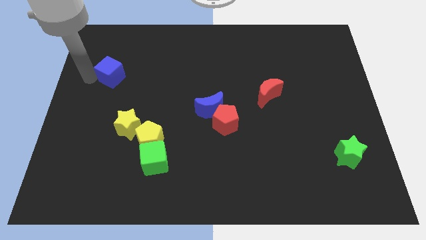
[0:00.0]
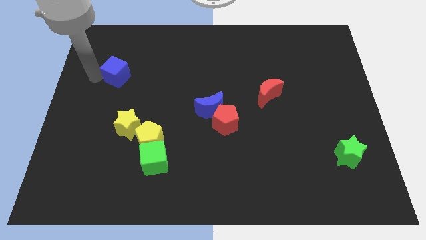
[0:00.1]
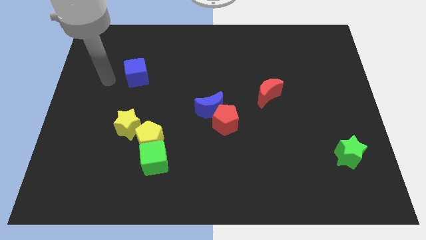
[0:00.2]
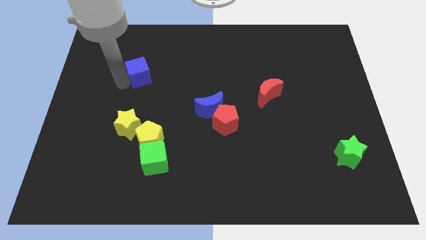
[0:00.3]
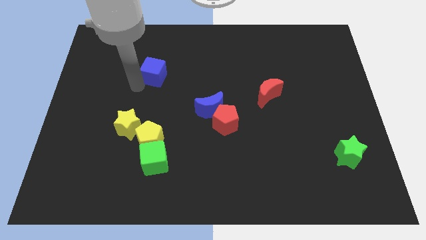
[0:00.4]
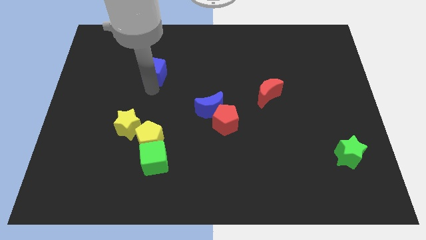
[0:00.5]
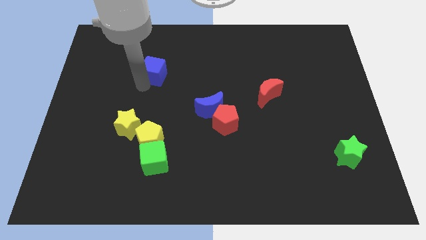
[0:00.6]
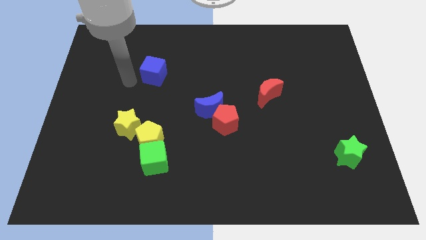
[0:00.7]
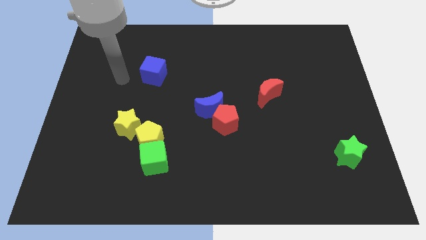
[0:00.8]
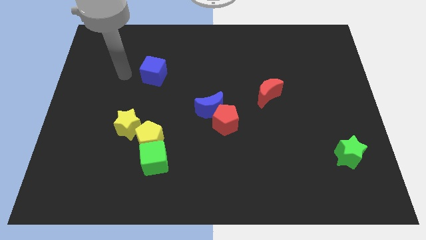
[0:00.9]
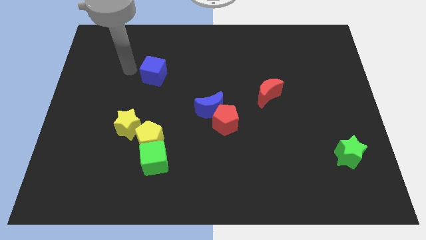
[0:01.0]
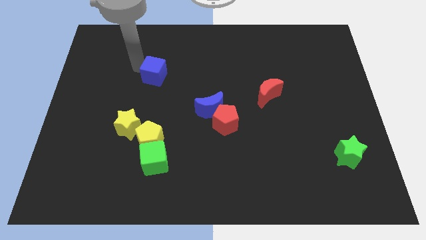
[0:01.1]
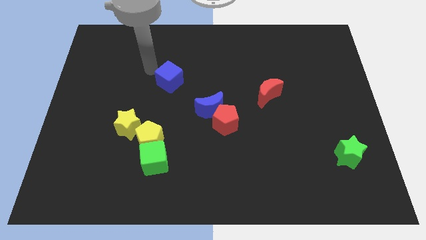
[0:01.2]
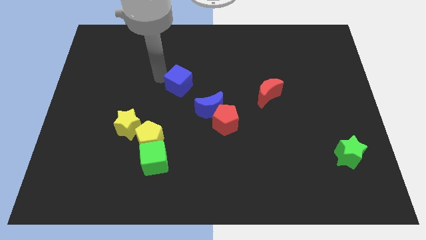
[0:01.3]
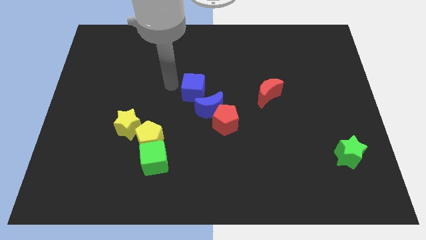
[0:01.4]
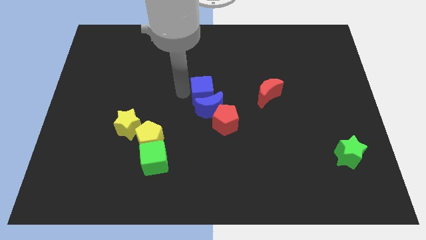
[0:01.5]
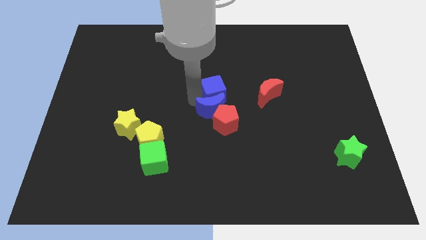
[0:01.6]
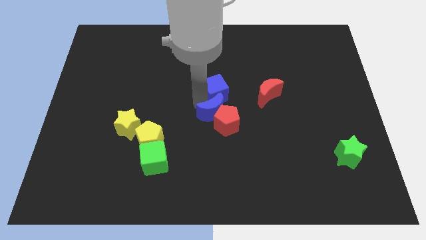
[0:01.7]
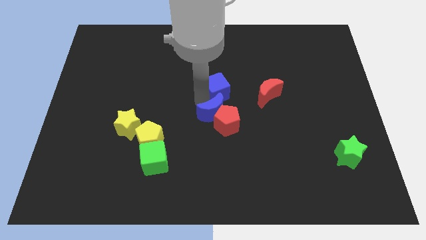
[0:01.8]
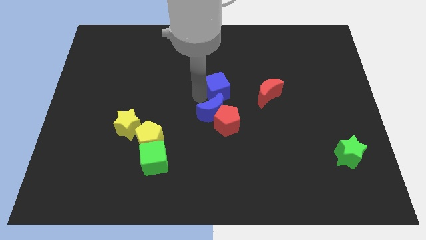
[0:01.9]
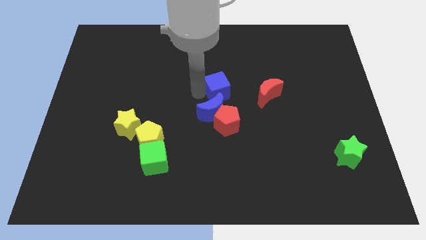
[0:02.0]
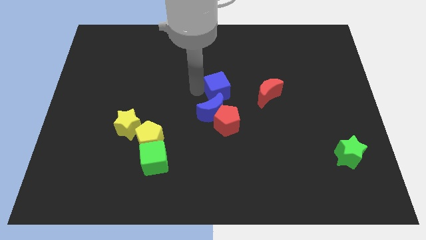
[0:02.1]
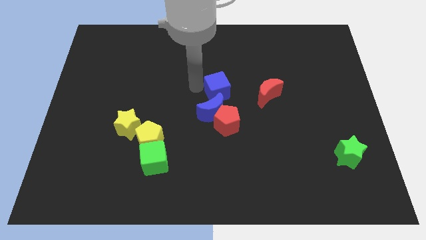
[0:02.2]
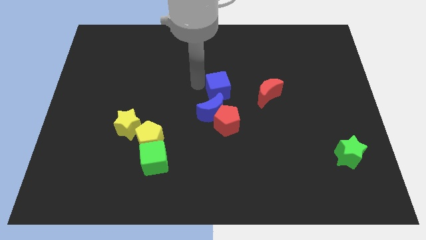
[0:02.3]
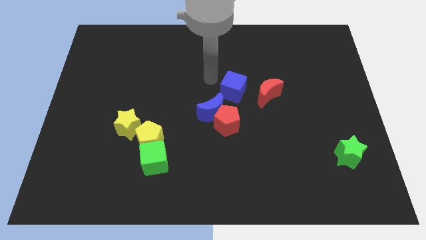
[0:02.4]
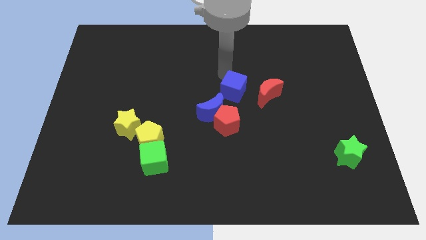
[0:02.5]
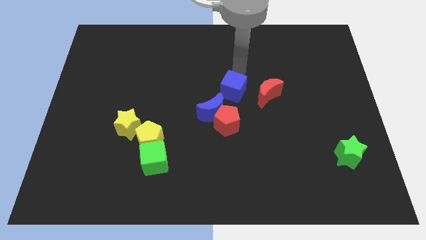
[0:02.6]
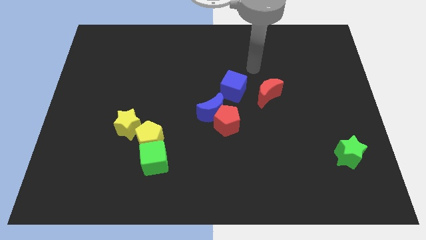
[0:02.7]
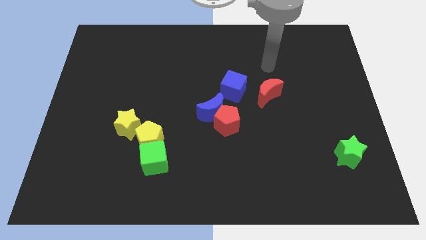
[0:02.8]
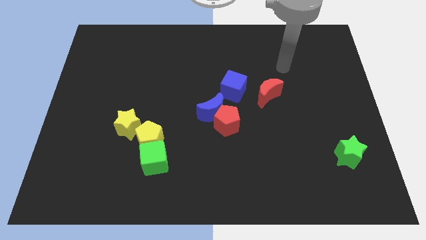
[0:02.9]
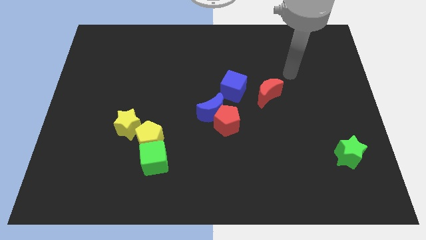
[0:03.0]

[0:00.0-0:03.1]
push the top left blue cube to the center of blue moon

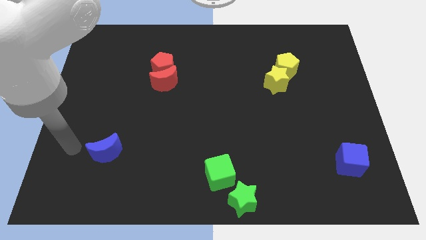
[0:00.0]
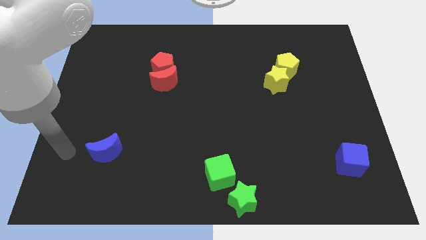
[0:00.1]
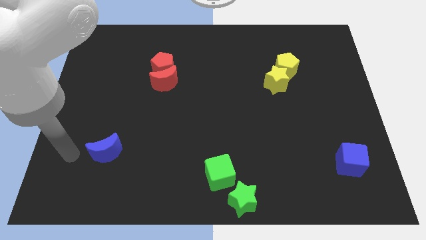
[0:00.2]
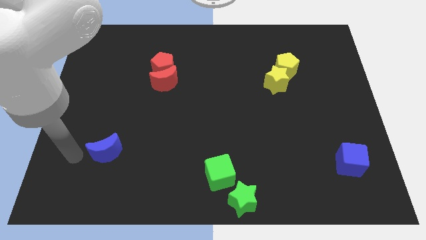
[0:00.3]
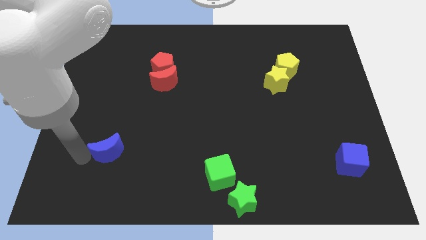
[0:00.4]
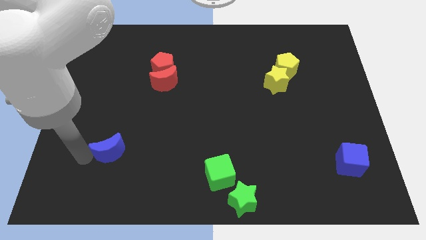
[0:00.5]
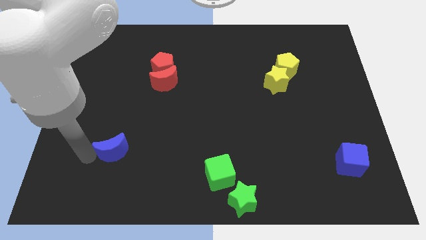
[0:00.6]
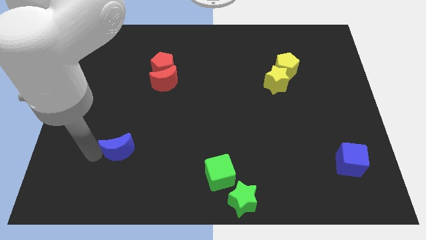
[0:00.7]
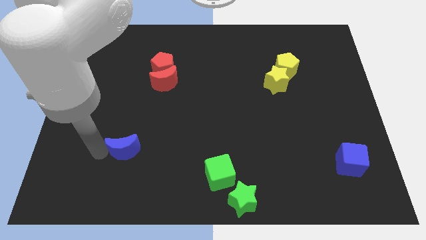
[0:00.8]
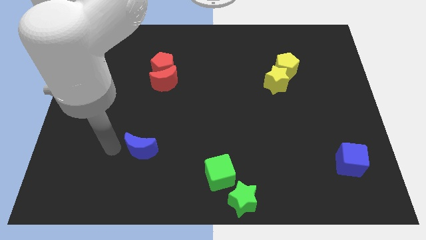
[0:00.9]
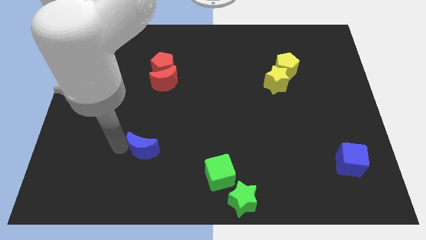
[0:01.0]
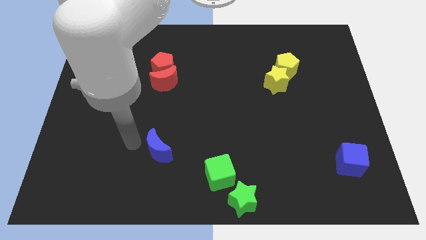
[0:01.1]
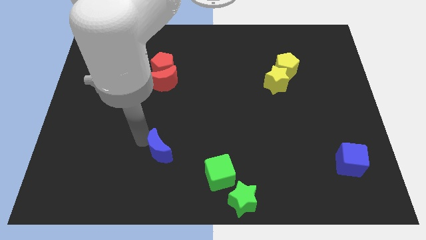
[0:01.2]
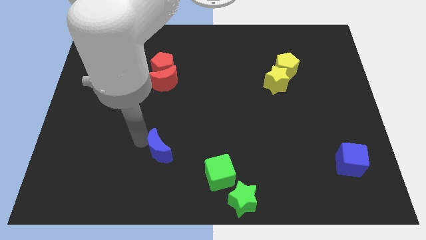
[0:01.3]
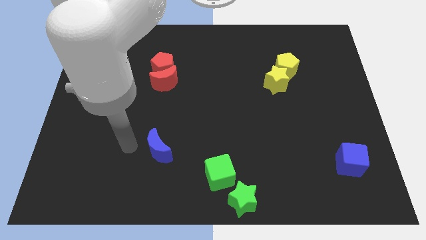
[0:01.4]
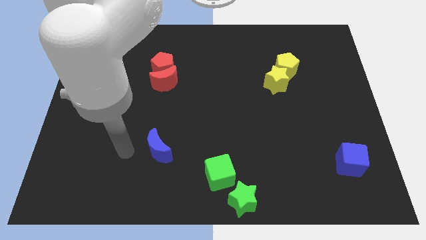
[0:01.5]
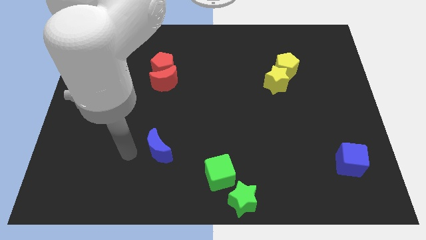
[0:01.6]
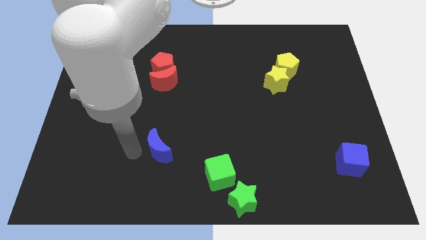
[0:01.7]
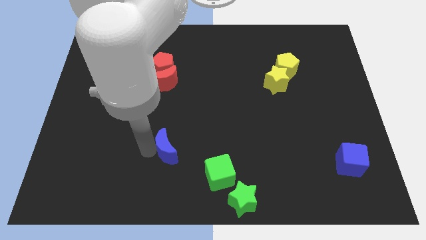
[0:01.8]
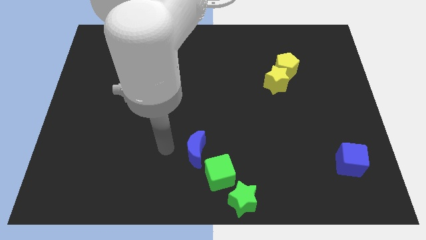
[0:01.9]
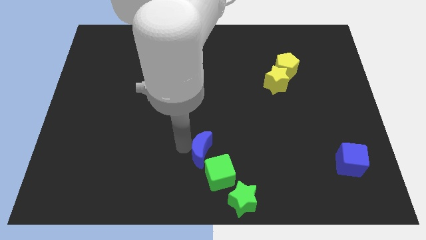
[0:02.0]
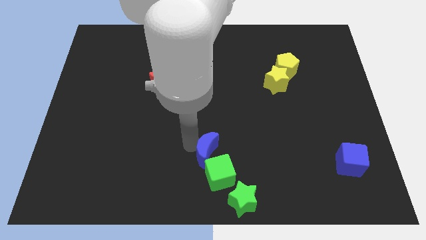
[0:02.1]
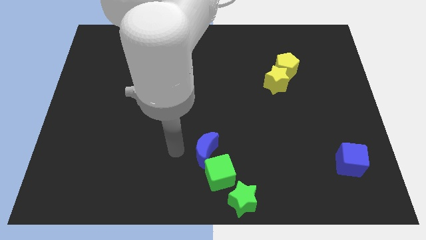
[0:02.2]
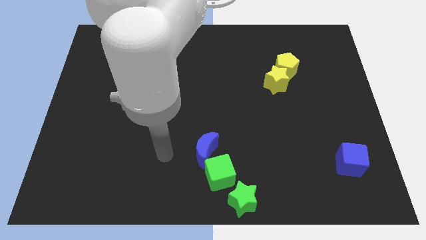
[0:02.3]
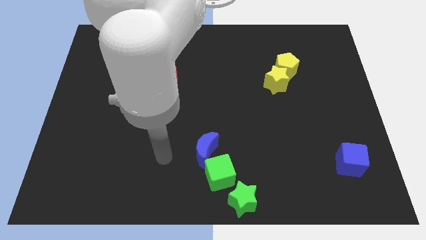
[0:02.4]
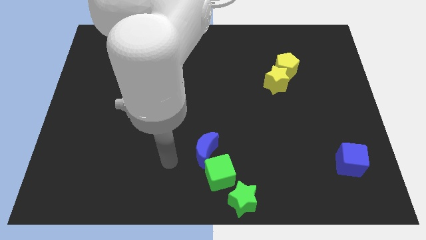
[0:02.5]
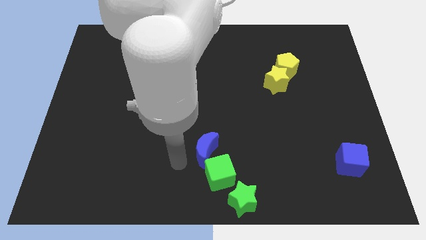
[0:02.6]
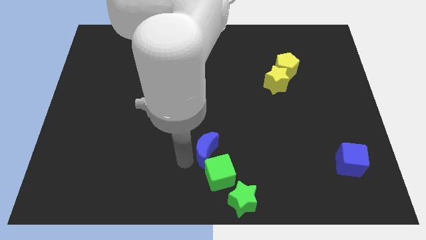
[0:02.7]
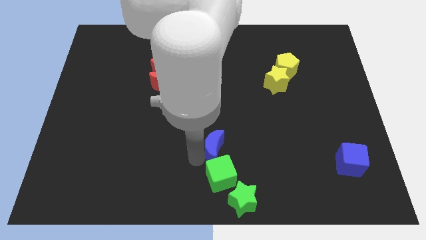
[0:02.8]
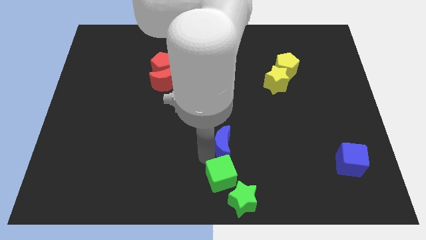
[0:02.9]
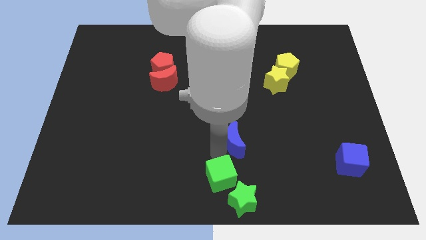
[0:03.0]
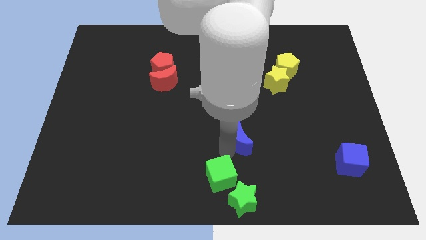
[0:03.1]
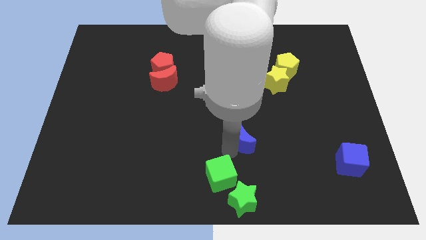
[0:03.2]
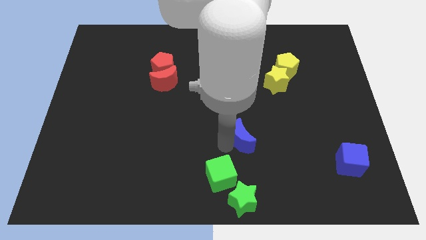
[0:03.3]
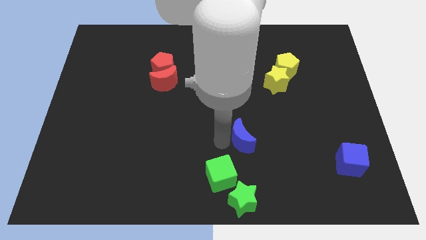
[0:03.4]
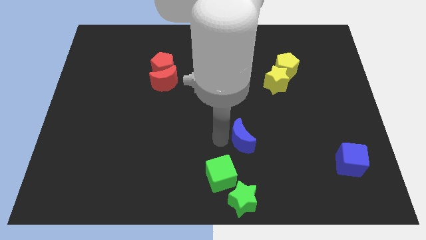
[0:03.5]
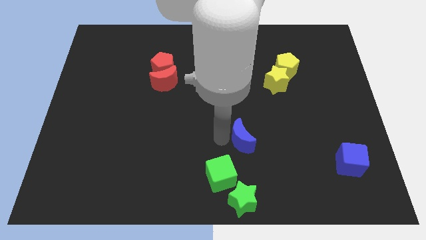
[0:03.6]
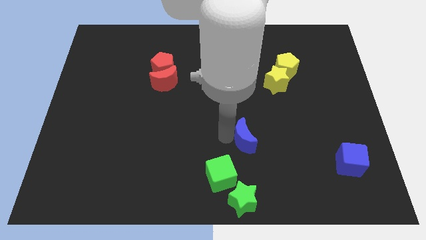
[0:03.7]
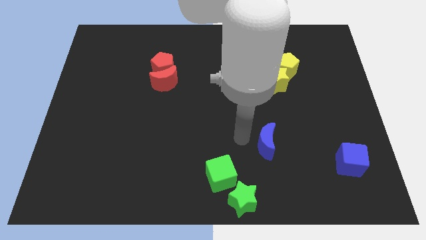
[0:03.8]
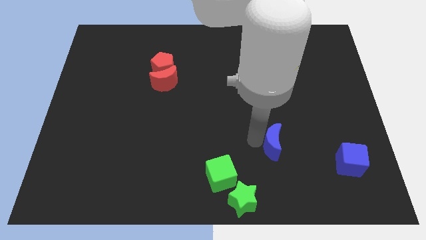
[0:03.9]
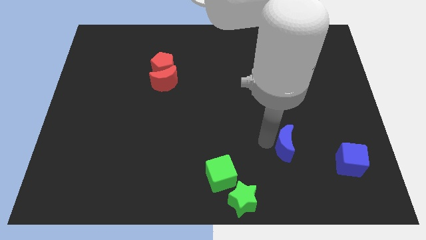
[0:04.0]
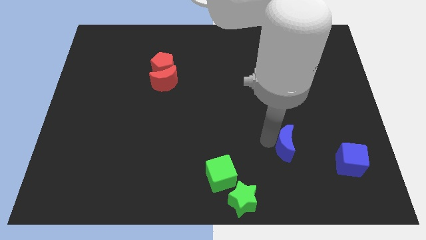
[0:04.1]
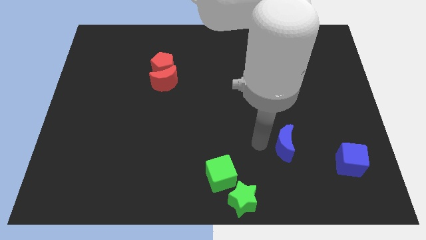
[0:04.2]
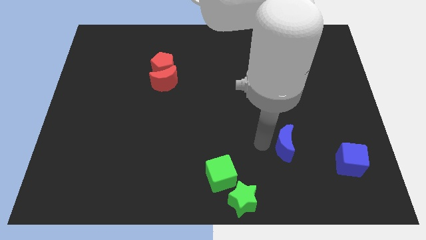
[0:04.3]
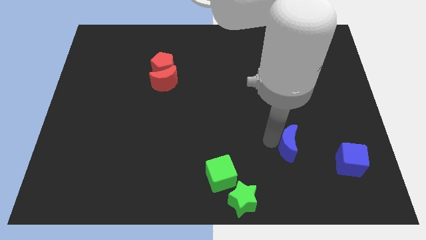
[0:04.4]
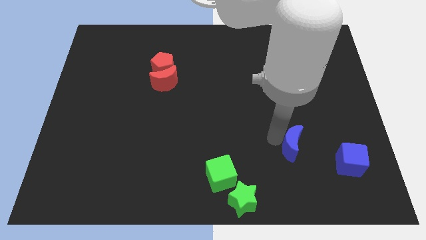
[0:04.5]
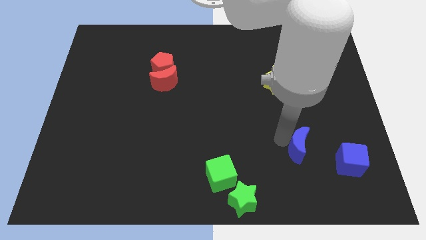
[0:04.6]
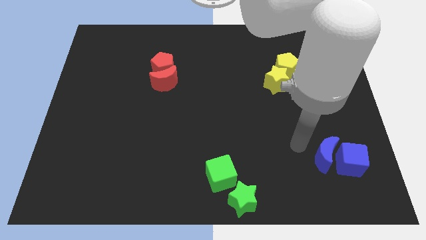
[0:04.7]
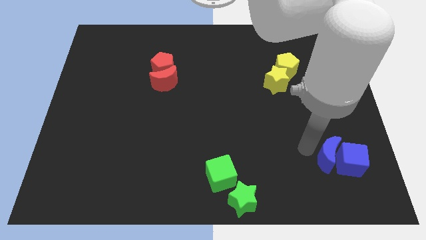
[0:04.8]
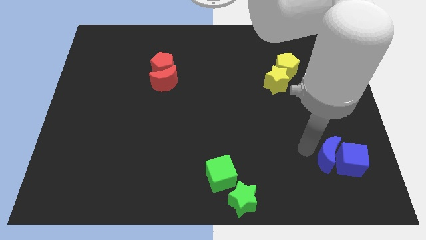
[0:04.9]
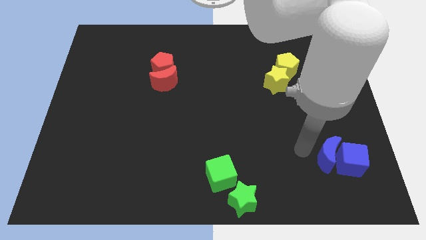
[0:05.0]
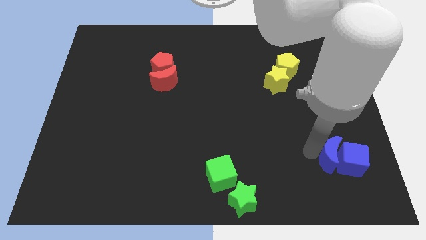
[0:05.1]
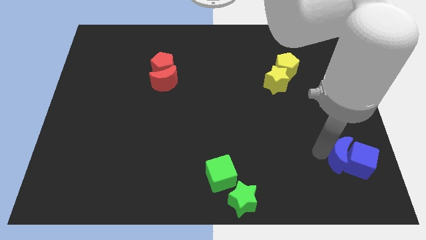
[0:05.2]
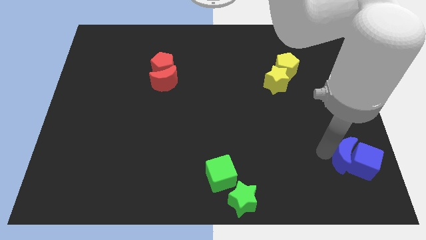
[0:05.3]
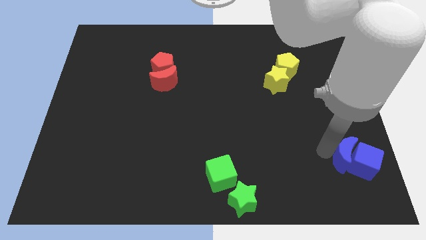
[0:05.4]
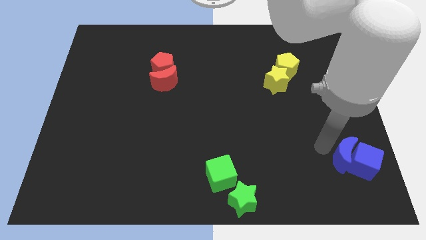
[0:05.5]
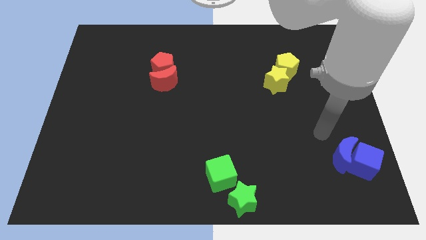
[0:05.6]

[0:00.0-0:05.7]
move the blue crescent into blue cube
